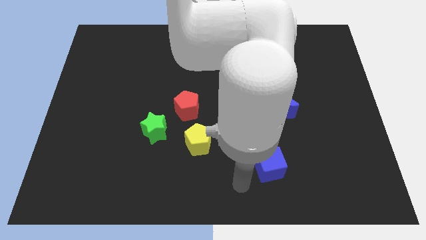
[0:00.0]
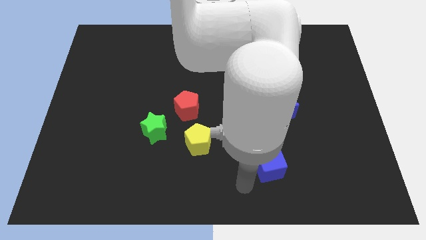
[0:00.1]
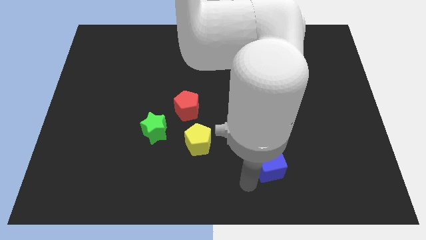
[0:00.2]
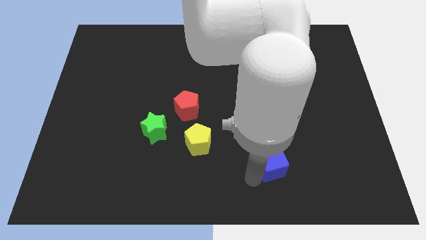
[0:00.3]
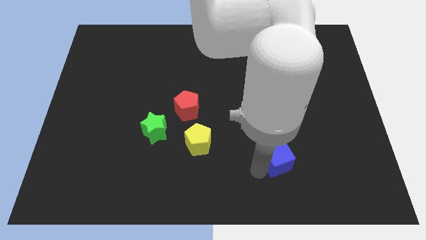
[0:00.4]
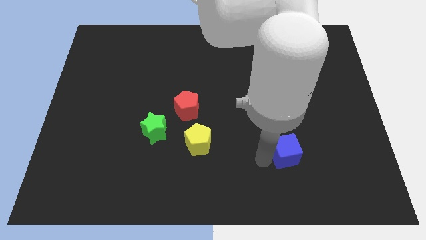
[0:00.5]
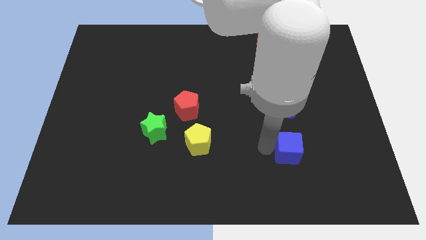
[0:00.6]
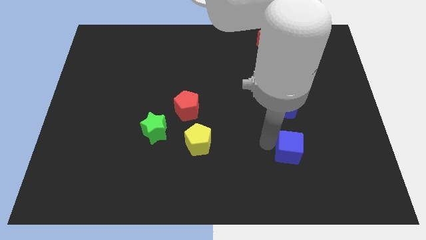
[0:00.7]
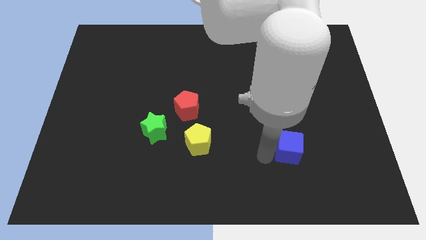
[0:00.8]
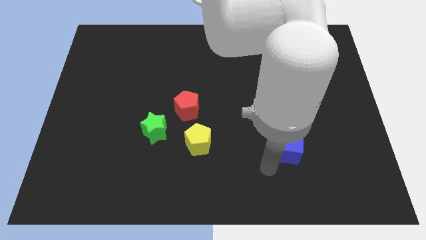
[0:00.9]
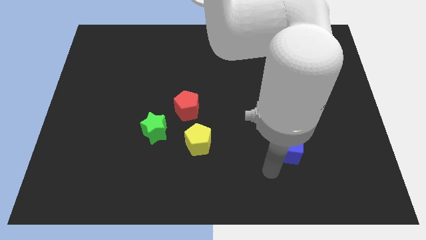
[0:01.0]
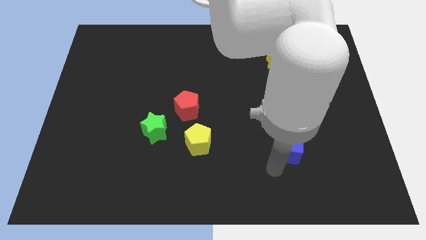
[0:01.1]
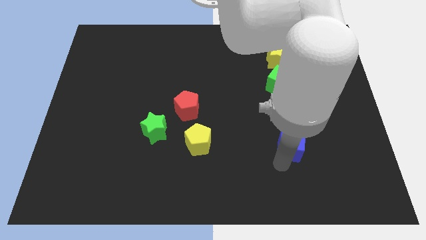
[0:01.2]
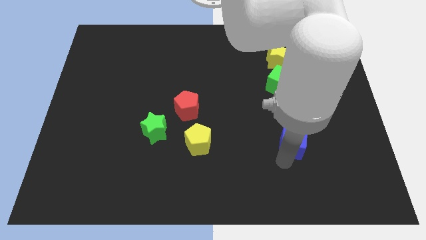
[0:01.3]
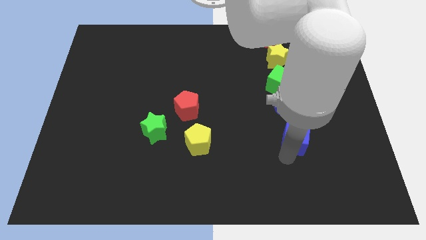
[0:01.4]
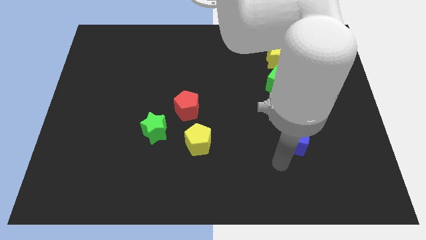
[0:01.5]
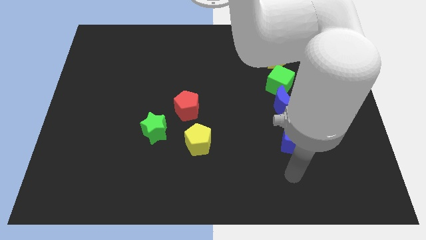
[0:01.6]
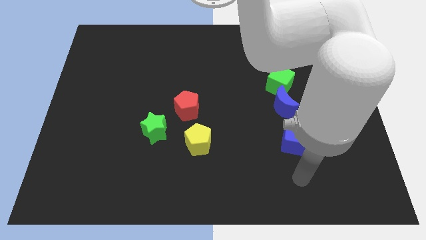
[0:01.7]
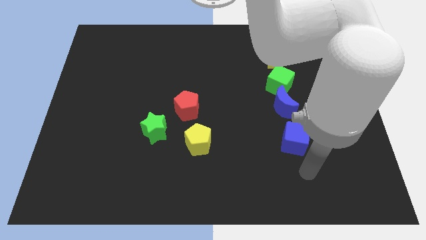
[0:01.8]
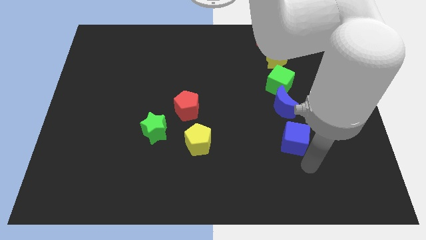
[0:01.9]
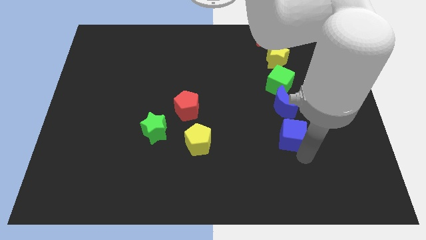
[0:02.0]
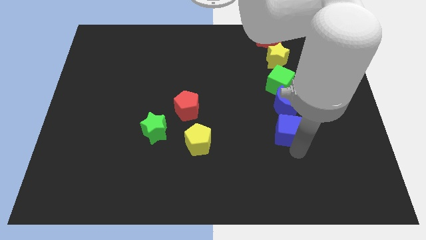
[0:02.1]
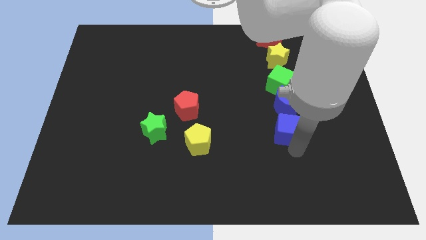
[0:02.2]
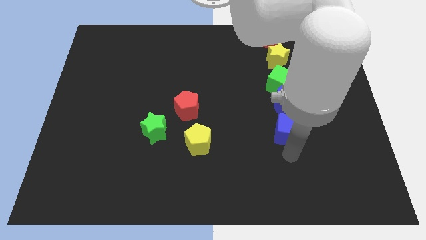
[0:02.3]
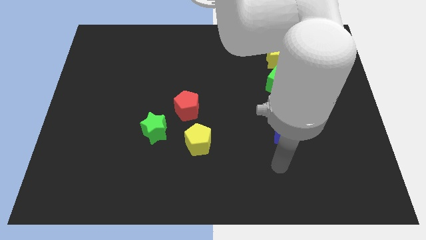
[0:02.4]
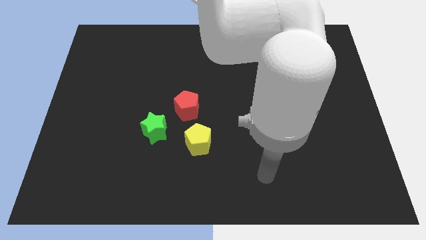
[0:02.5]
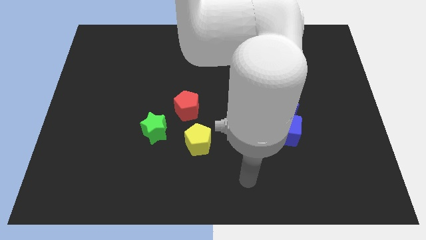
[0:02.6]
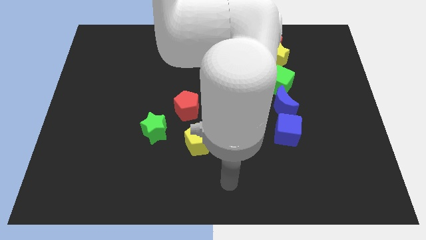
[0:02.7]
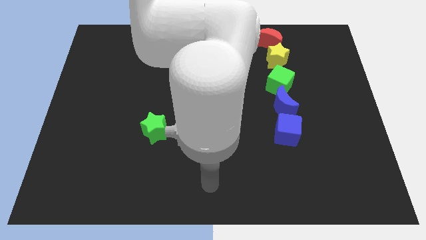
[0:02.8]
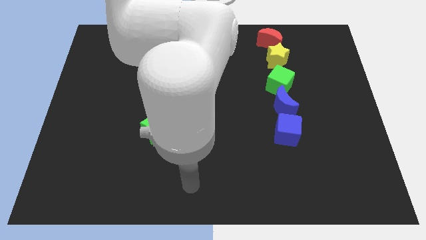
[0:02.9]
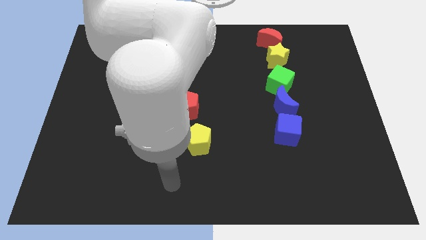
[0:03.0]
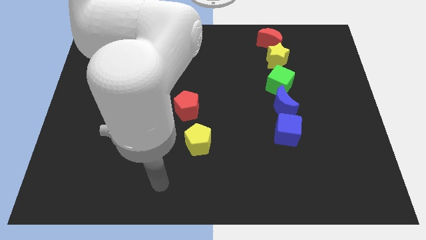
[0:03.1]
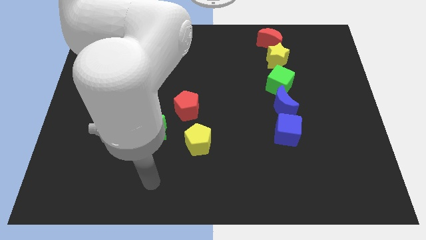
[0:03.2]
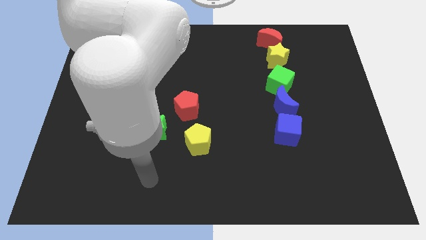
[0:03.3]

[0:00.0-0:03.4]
move the blue cube close to the blue semicircle

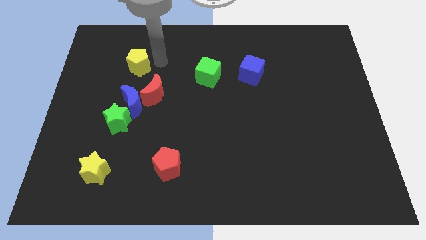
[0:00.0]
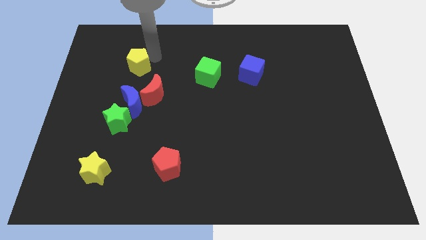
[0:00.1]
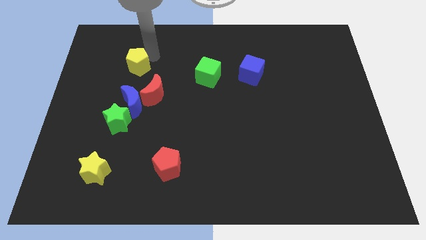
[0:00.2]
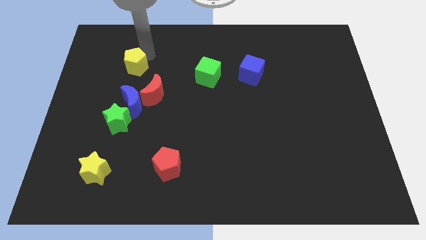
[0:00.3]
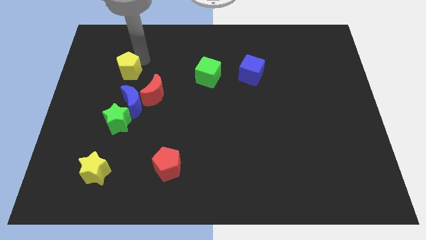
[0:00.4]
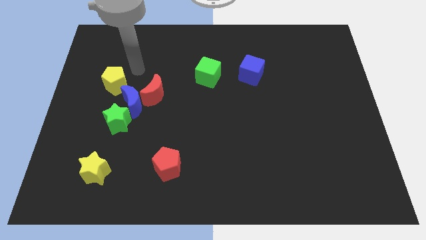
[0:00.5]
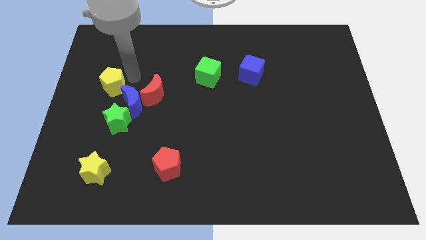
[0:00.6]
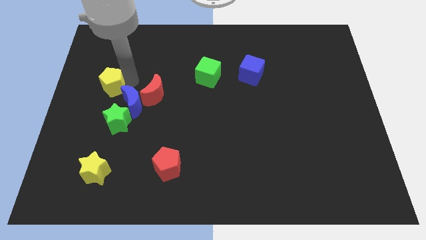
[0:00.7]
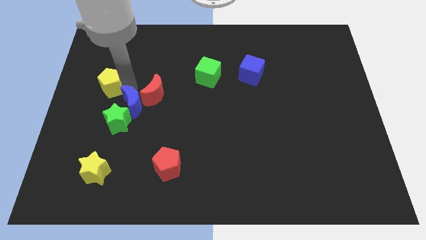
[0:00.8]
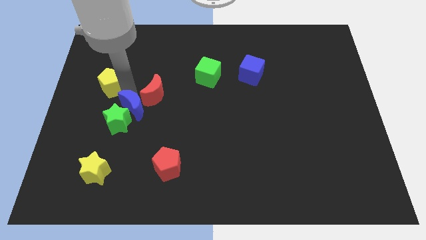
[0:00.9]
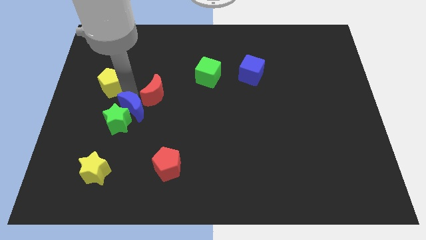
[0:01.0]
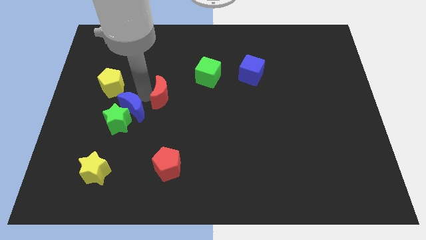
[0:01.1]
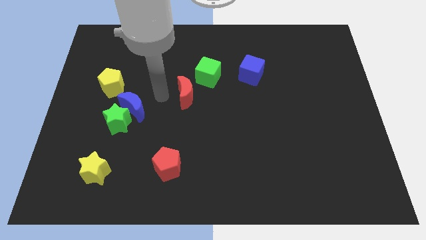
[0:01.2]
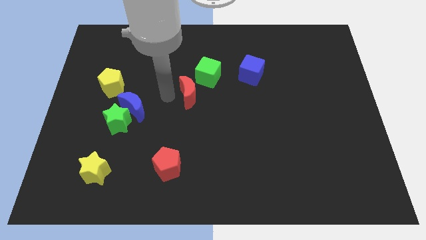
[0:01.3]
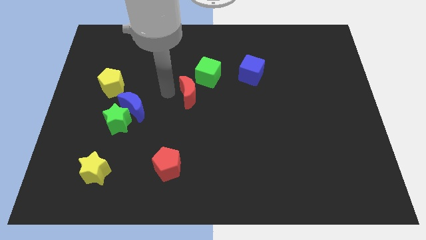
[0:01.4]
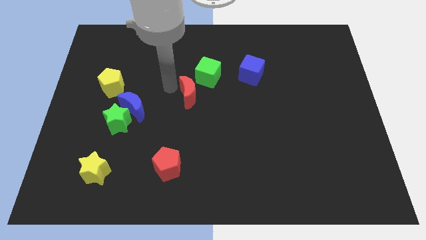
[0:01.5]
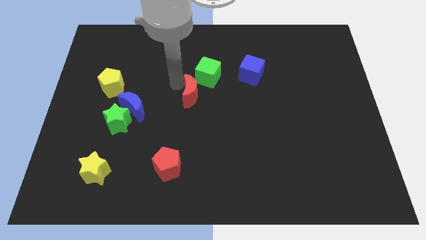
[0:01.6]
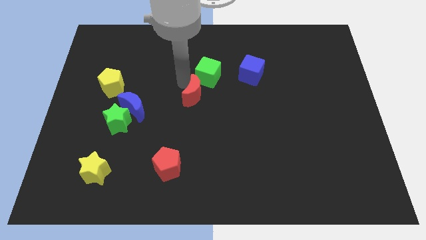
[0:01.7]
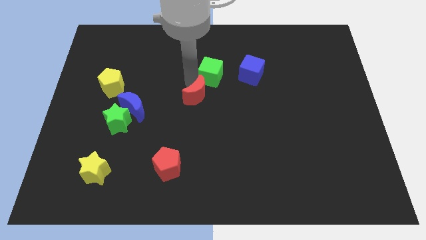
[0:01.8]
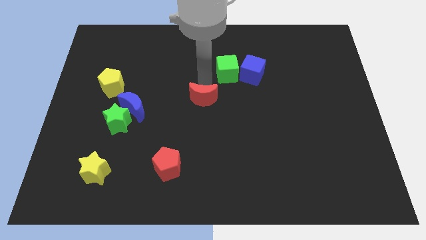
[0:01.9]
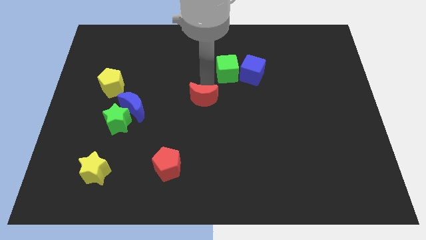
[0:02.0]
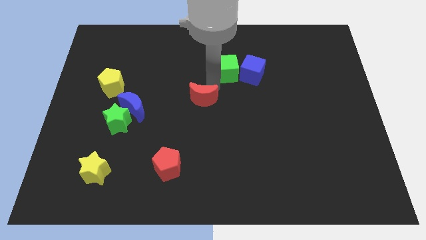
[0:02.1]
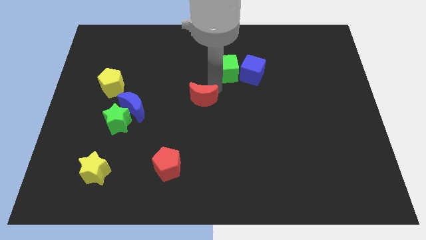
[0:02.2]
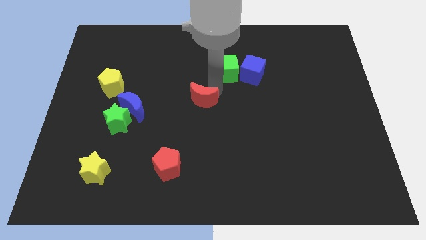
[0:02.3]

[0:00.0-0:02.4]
place the red pentagon to the middle of the board

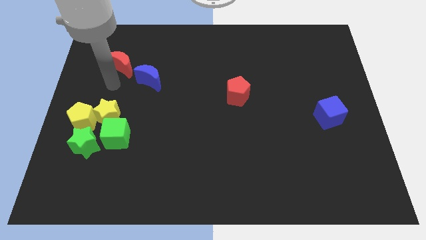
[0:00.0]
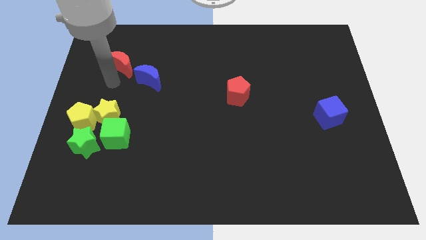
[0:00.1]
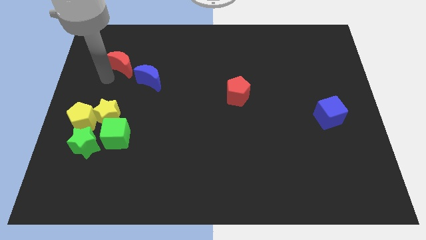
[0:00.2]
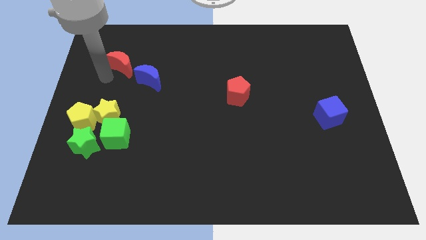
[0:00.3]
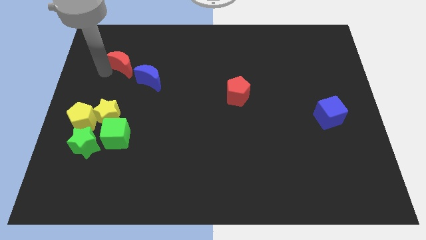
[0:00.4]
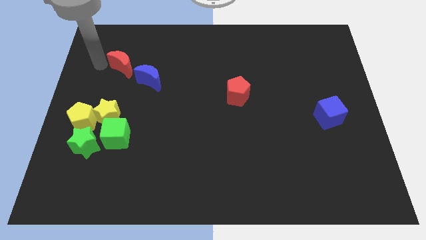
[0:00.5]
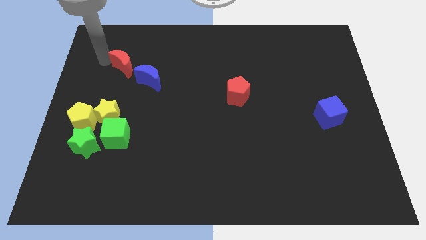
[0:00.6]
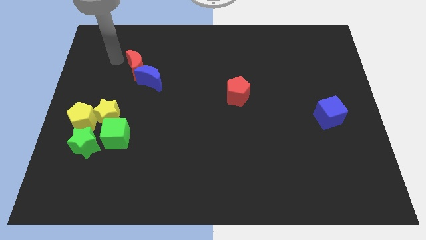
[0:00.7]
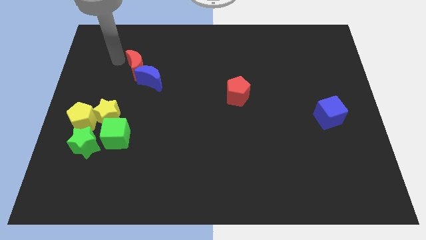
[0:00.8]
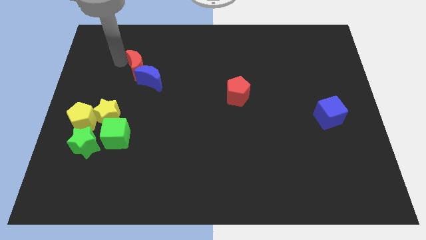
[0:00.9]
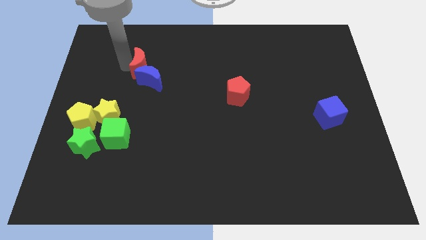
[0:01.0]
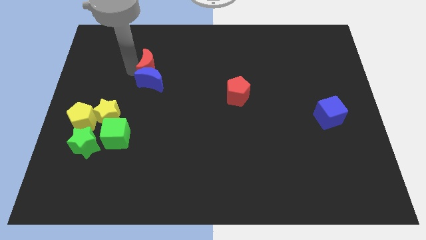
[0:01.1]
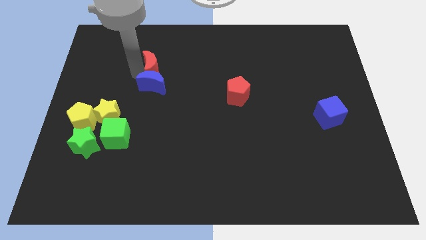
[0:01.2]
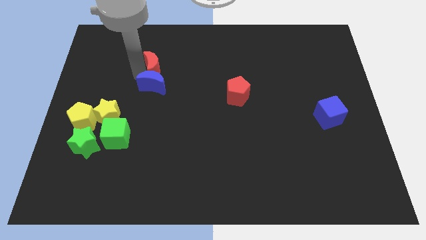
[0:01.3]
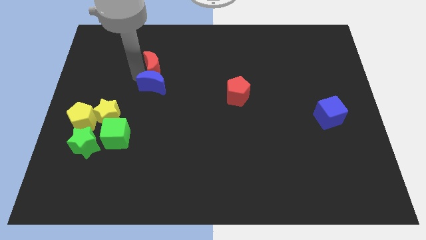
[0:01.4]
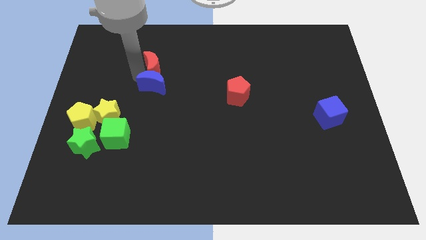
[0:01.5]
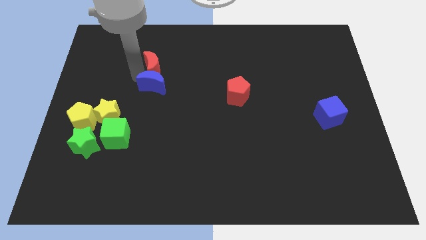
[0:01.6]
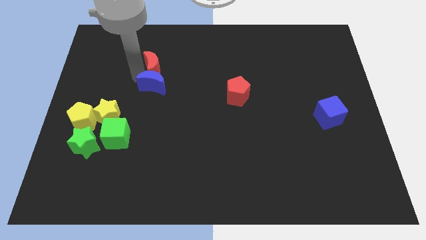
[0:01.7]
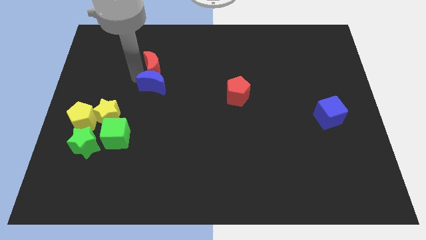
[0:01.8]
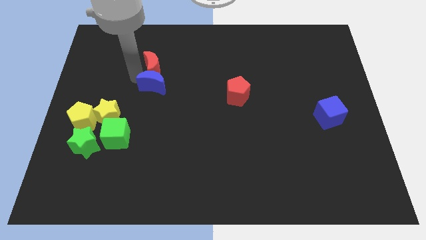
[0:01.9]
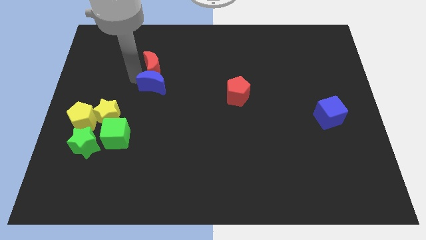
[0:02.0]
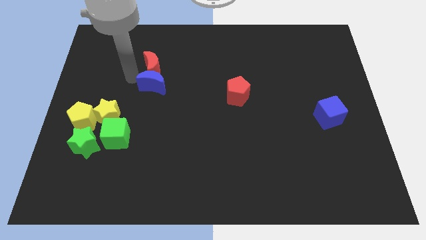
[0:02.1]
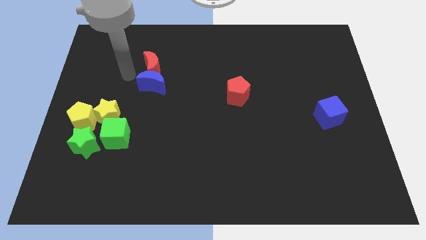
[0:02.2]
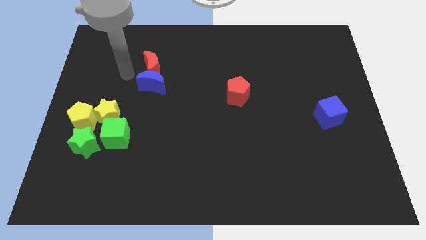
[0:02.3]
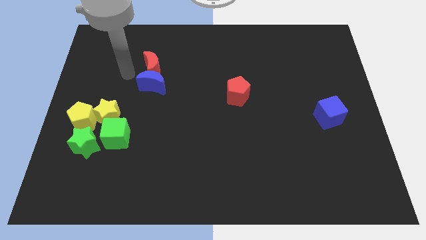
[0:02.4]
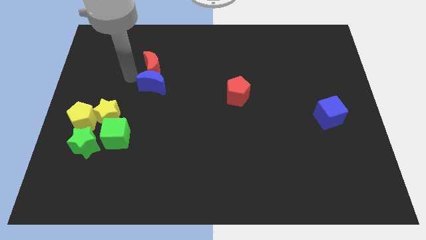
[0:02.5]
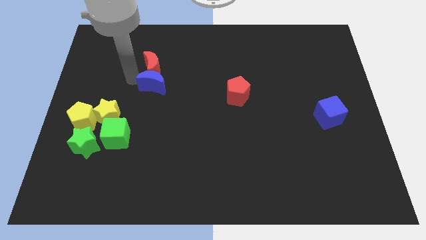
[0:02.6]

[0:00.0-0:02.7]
move the red moon to the top of the blue moon

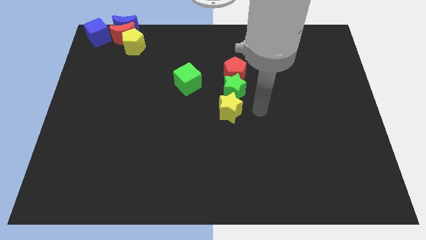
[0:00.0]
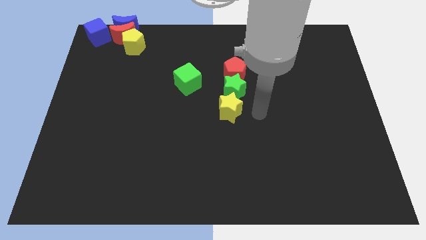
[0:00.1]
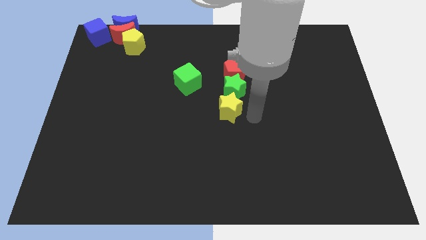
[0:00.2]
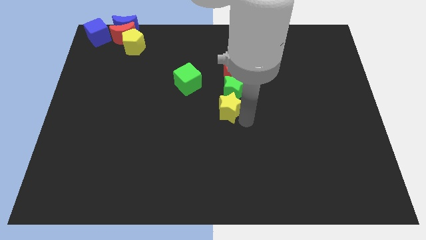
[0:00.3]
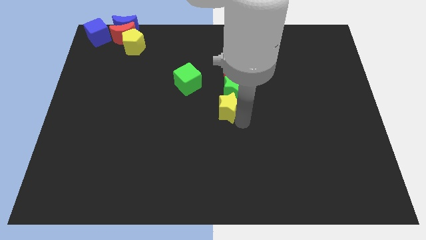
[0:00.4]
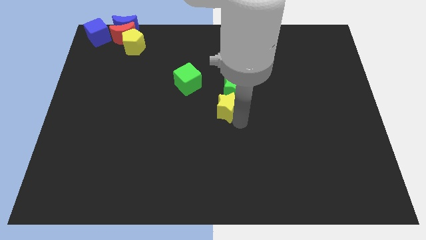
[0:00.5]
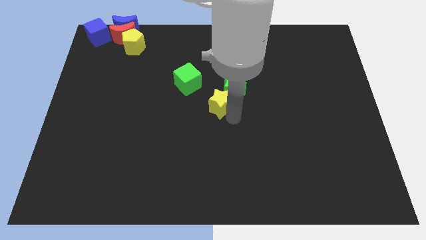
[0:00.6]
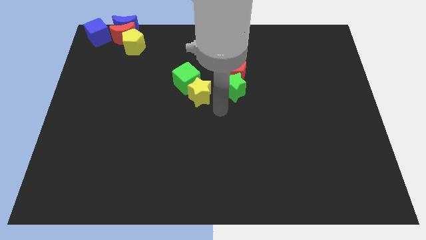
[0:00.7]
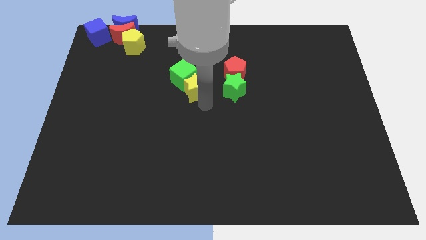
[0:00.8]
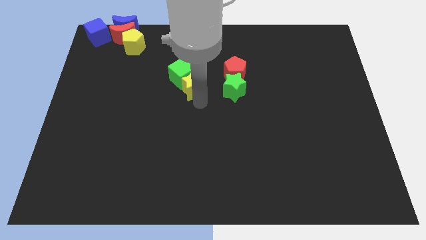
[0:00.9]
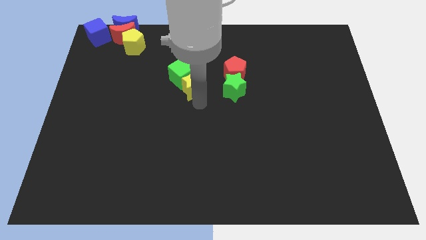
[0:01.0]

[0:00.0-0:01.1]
push yellow star into green cube
